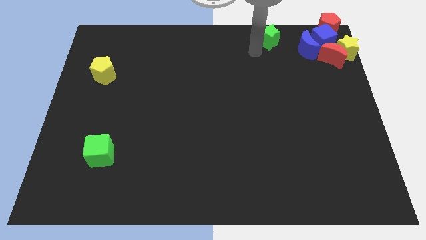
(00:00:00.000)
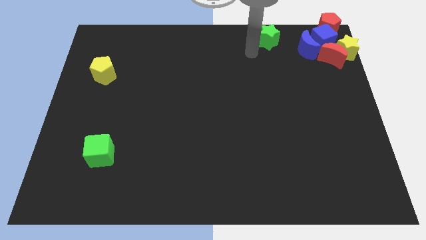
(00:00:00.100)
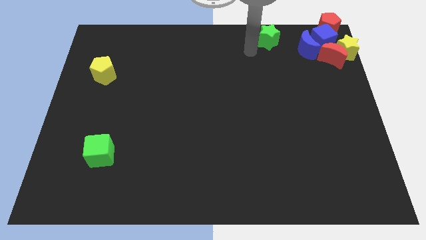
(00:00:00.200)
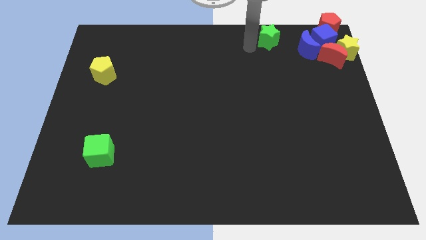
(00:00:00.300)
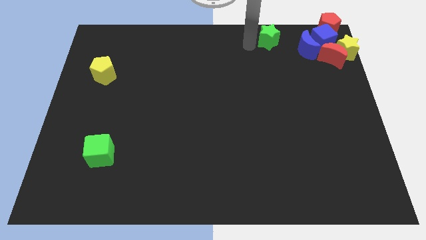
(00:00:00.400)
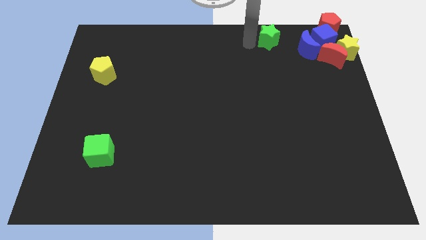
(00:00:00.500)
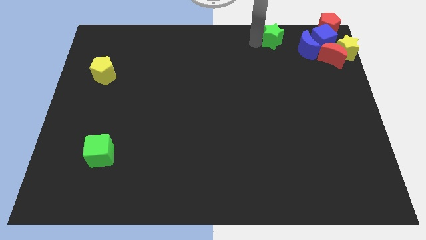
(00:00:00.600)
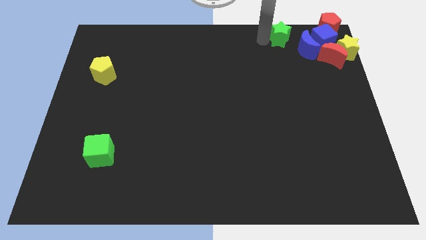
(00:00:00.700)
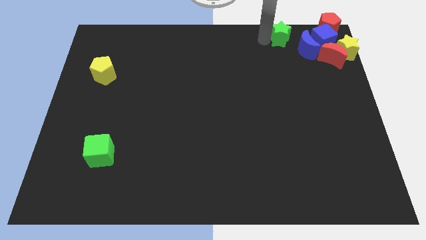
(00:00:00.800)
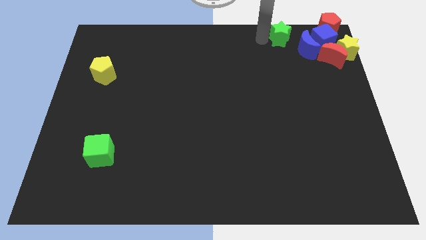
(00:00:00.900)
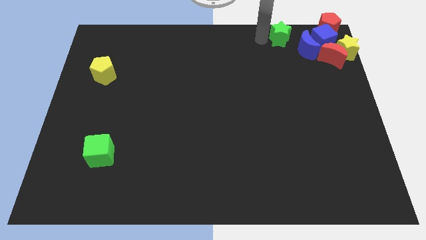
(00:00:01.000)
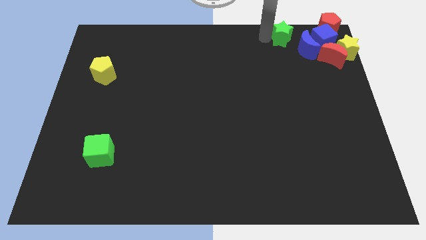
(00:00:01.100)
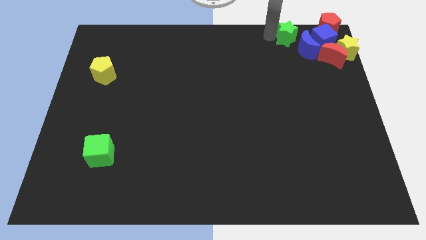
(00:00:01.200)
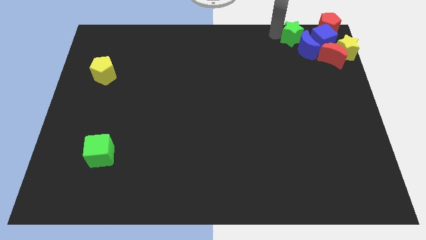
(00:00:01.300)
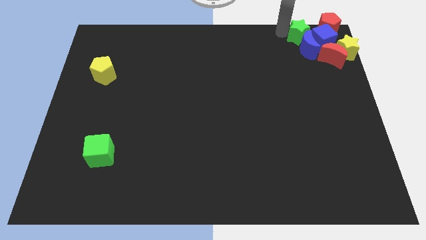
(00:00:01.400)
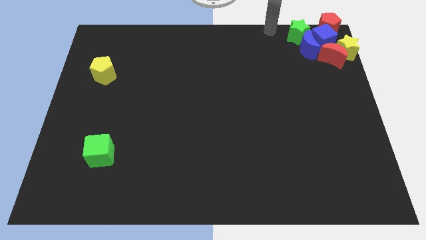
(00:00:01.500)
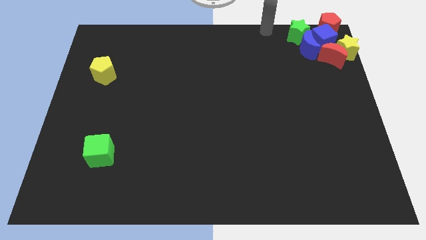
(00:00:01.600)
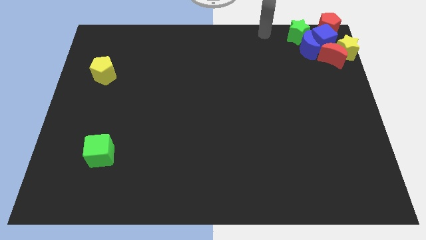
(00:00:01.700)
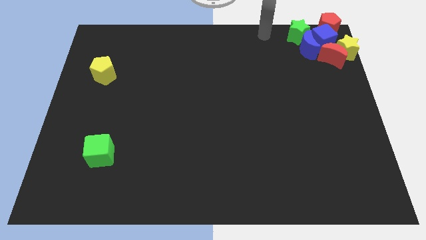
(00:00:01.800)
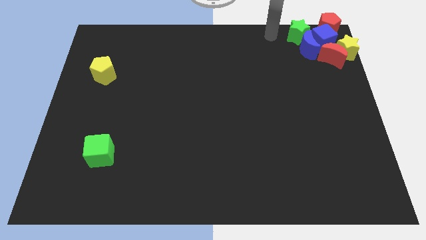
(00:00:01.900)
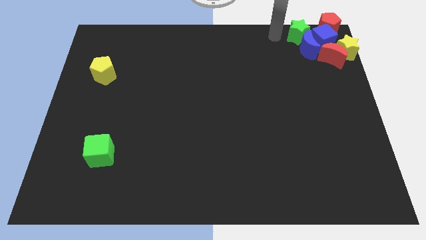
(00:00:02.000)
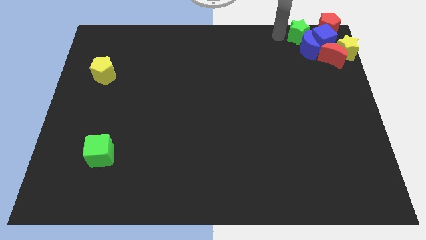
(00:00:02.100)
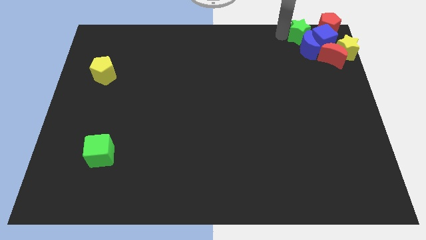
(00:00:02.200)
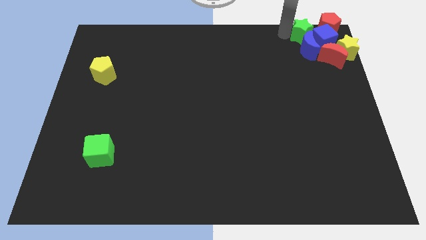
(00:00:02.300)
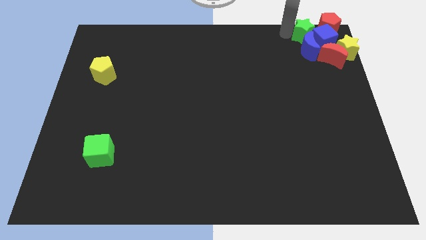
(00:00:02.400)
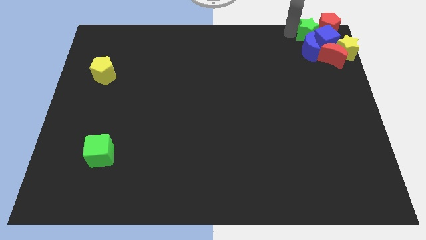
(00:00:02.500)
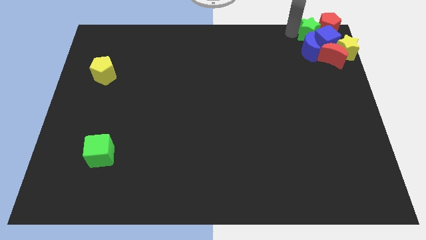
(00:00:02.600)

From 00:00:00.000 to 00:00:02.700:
push the green star to the top of the blue crescent

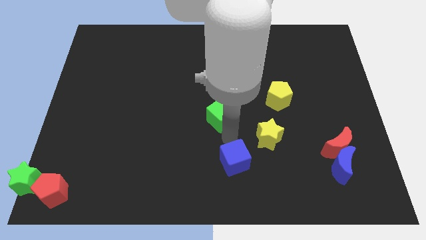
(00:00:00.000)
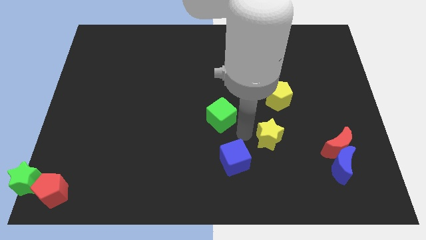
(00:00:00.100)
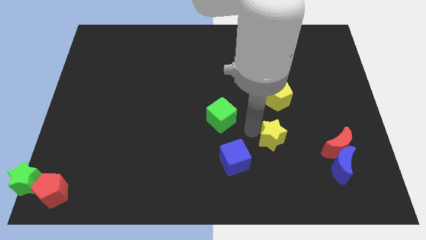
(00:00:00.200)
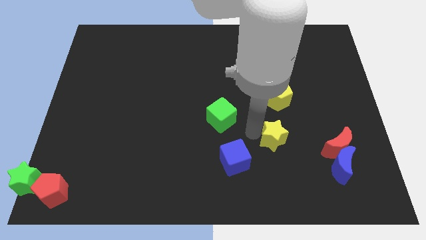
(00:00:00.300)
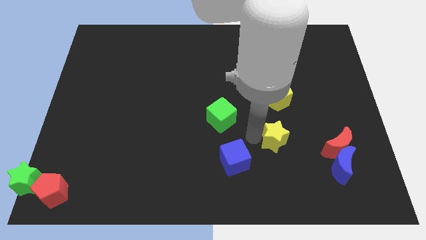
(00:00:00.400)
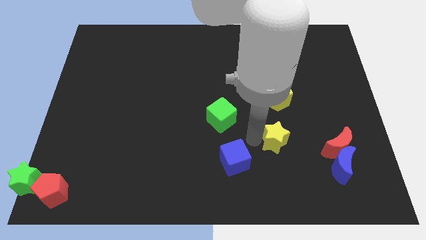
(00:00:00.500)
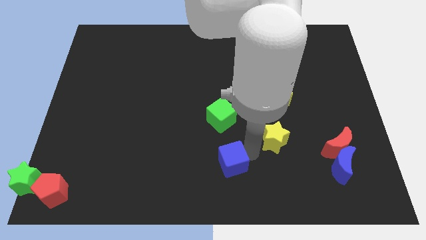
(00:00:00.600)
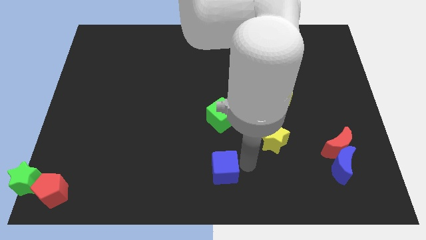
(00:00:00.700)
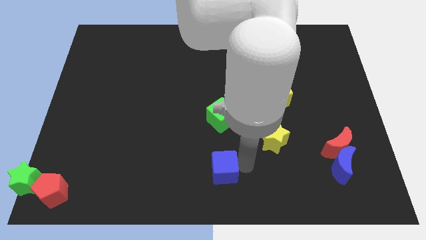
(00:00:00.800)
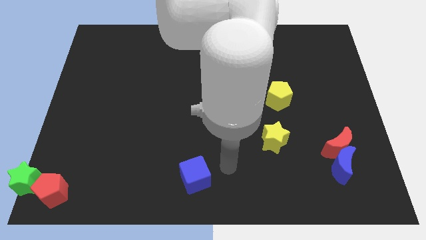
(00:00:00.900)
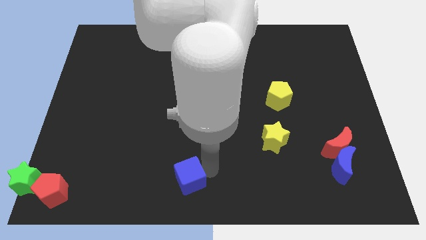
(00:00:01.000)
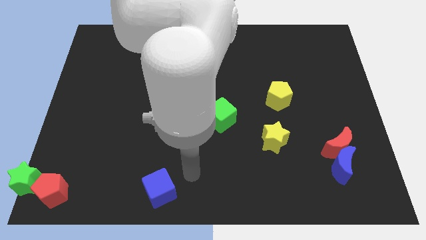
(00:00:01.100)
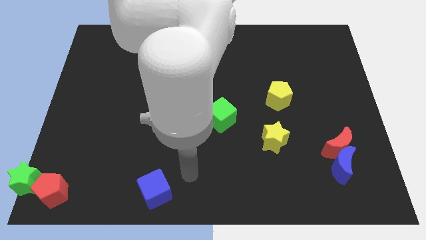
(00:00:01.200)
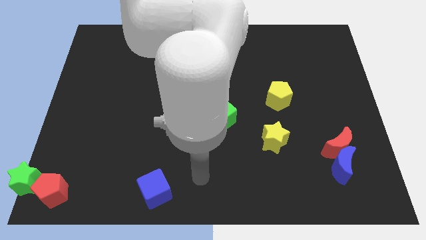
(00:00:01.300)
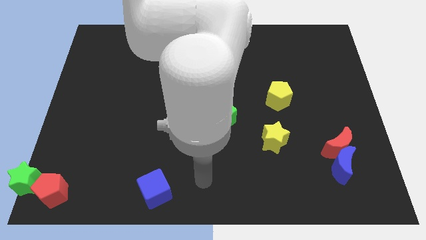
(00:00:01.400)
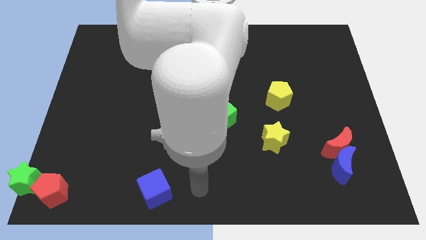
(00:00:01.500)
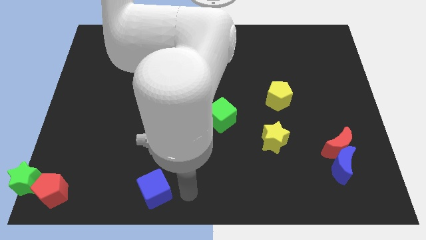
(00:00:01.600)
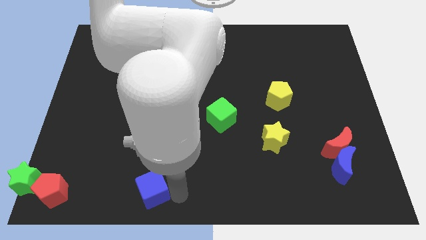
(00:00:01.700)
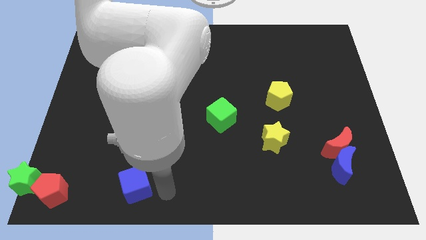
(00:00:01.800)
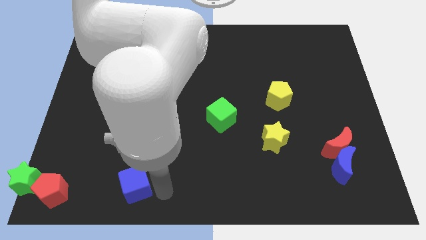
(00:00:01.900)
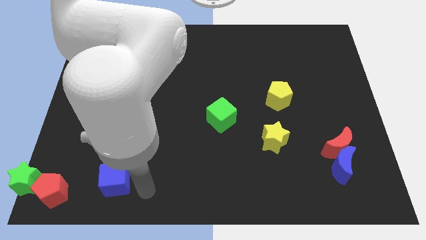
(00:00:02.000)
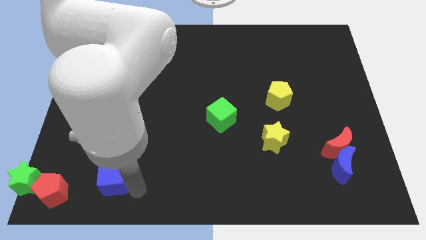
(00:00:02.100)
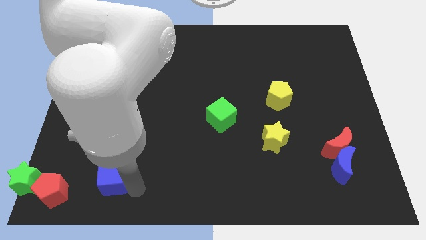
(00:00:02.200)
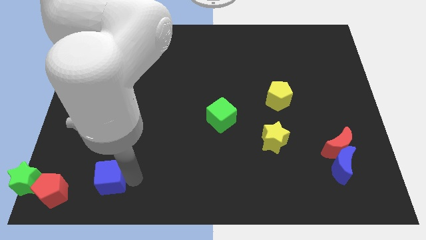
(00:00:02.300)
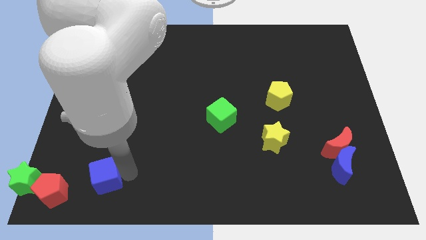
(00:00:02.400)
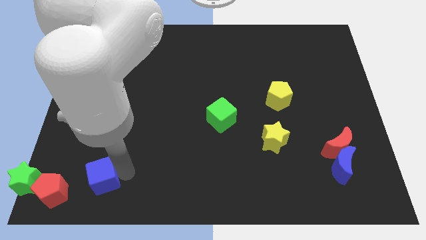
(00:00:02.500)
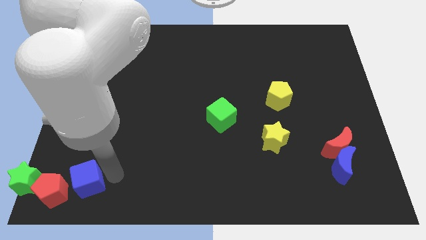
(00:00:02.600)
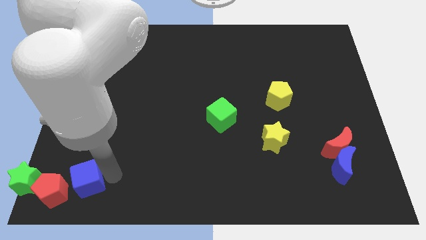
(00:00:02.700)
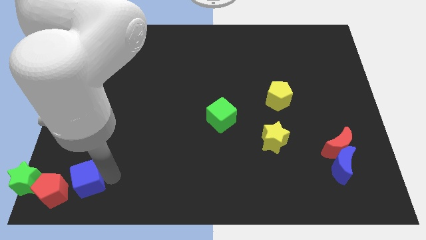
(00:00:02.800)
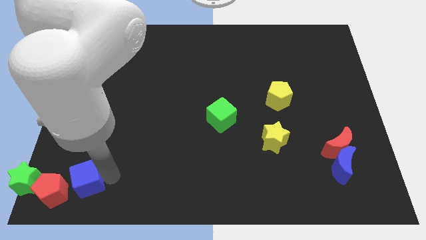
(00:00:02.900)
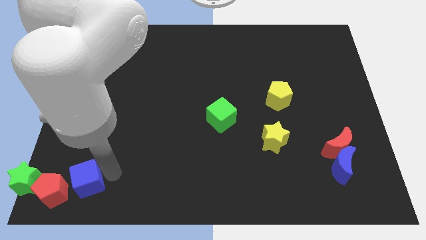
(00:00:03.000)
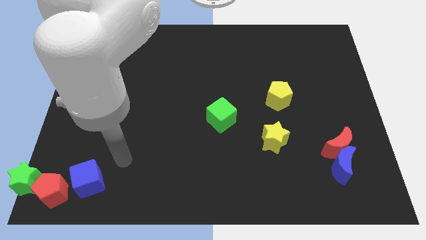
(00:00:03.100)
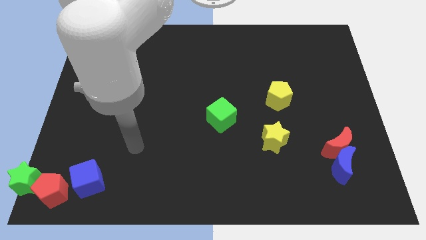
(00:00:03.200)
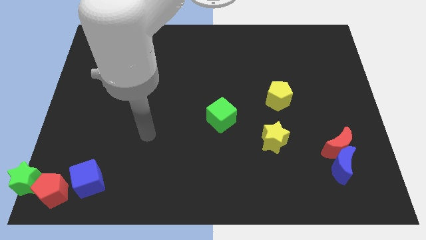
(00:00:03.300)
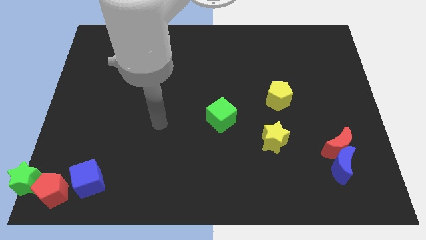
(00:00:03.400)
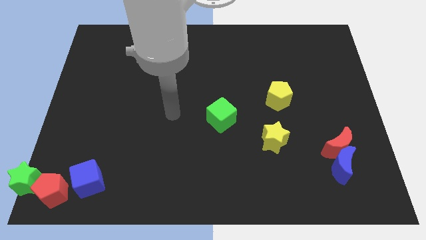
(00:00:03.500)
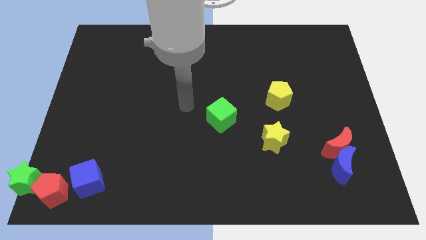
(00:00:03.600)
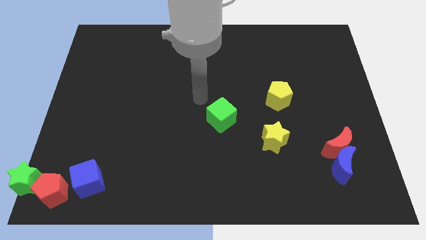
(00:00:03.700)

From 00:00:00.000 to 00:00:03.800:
push the blue cube close to the red pentagon

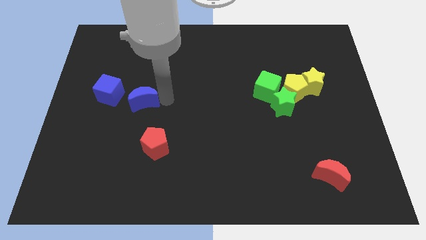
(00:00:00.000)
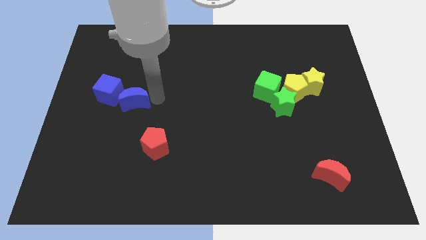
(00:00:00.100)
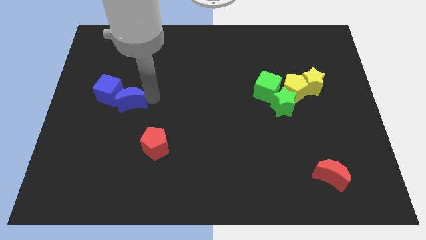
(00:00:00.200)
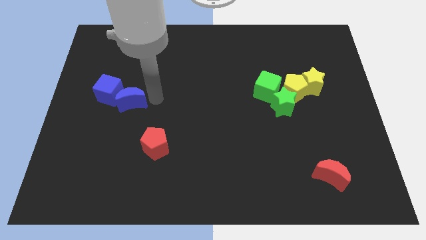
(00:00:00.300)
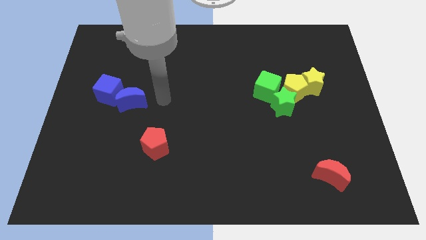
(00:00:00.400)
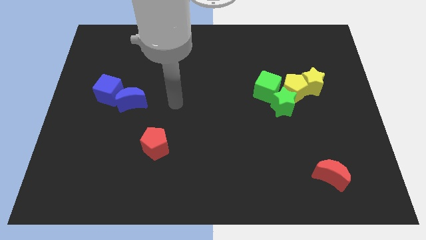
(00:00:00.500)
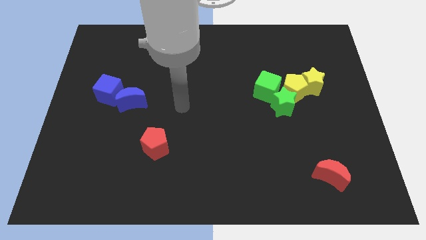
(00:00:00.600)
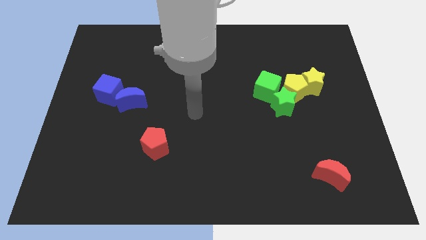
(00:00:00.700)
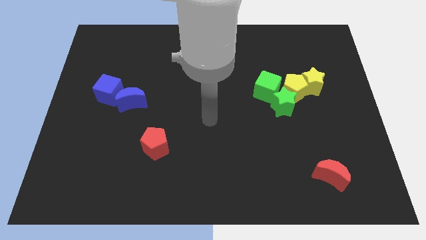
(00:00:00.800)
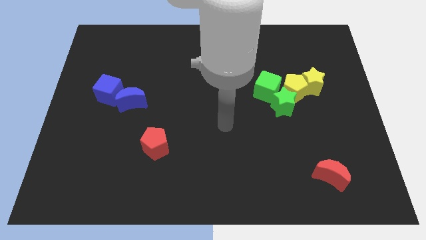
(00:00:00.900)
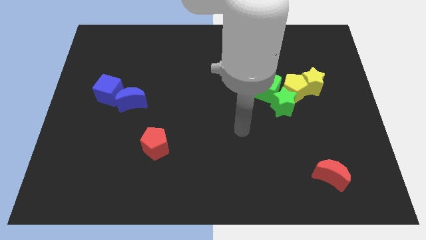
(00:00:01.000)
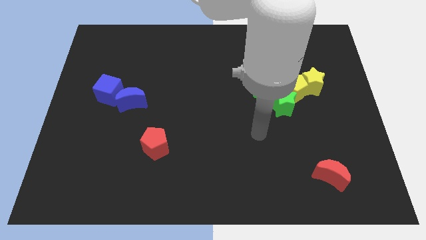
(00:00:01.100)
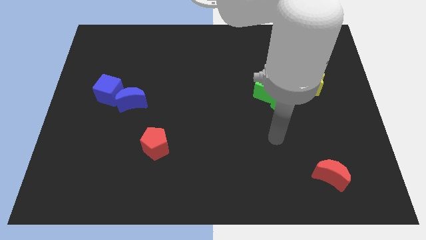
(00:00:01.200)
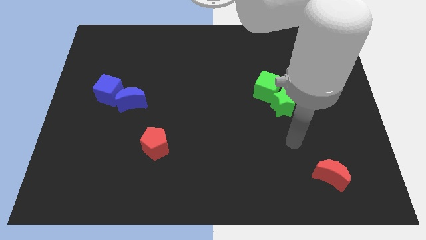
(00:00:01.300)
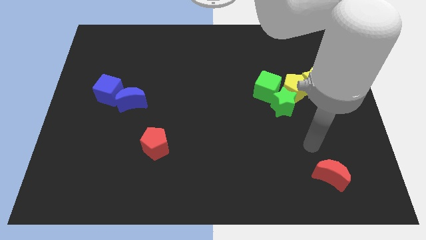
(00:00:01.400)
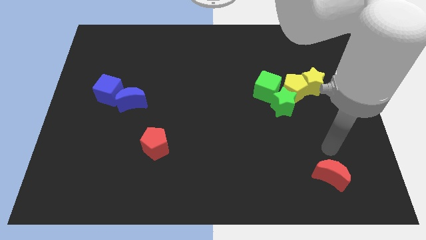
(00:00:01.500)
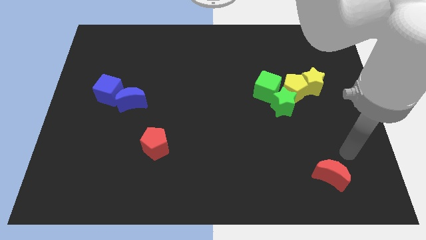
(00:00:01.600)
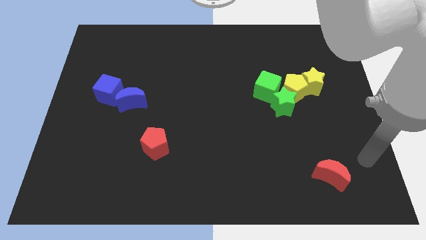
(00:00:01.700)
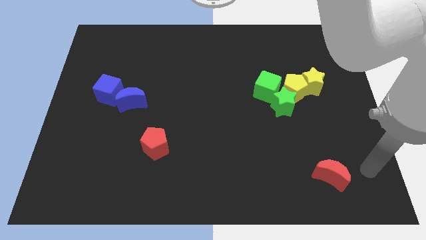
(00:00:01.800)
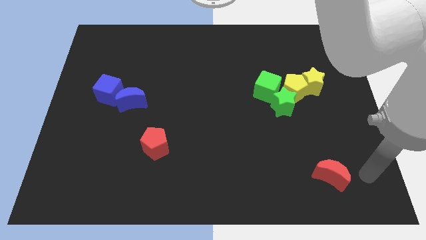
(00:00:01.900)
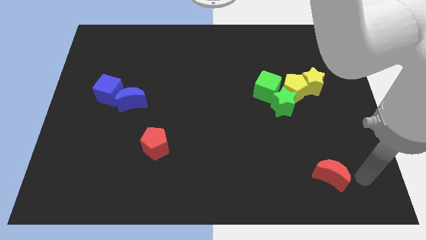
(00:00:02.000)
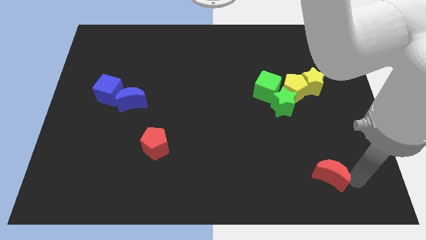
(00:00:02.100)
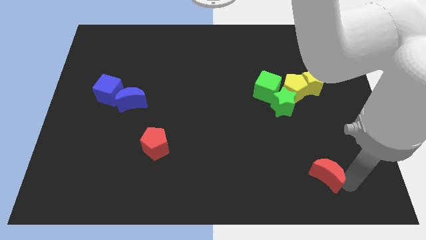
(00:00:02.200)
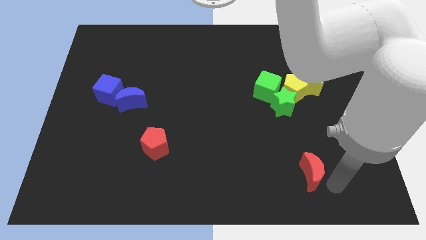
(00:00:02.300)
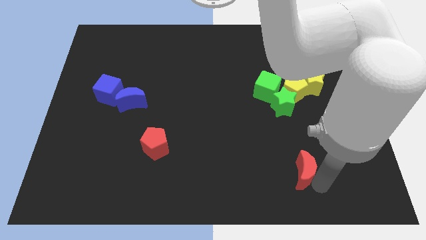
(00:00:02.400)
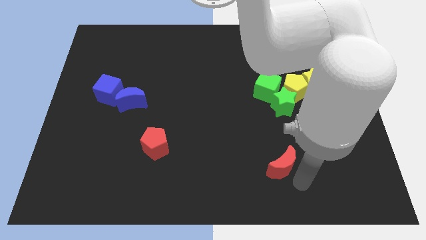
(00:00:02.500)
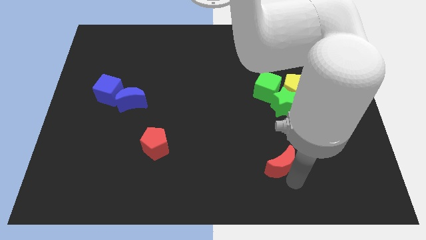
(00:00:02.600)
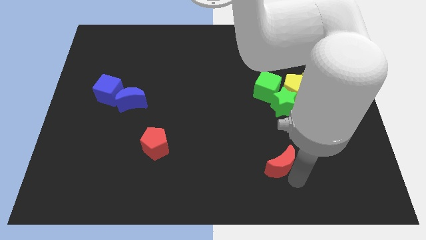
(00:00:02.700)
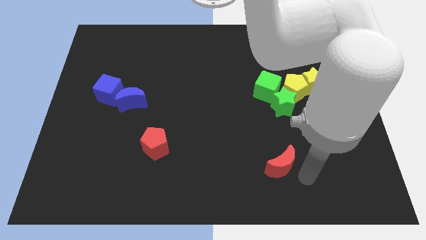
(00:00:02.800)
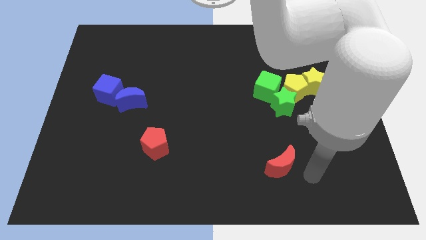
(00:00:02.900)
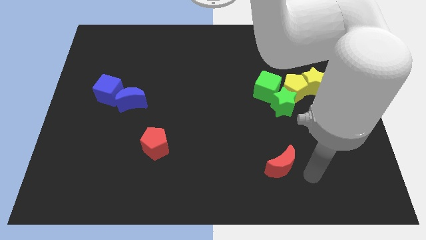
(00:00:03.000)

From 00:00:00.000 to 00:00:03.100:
place the red moon down to the green star
